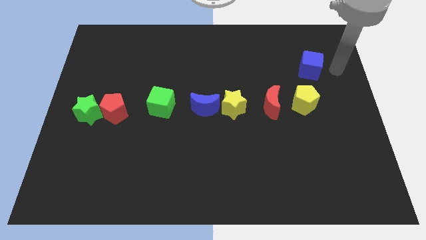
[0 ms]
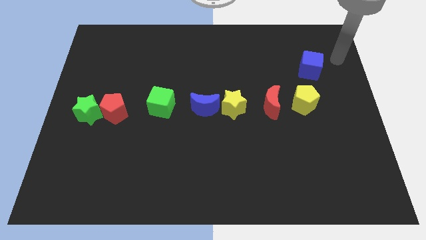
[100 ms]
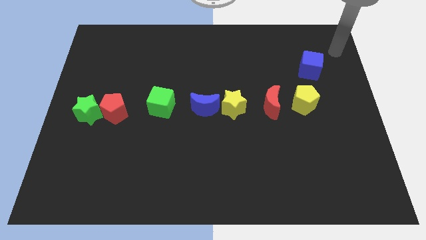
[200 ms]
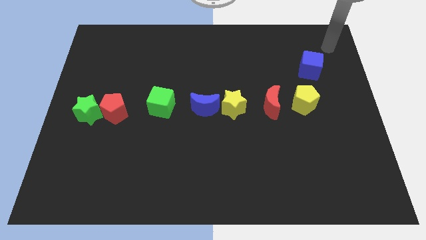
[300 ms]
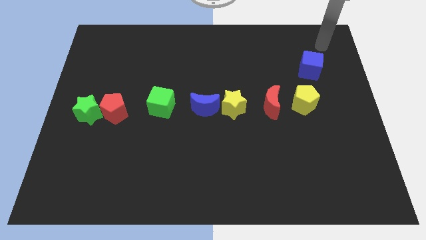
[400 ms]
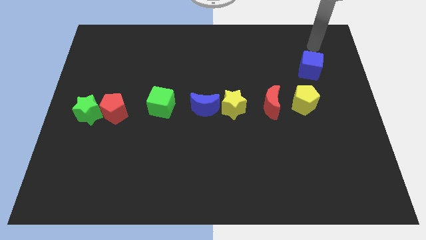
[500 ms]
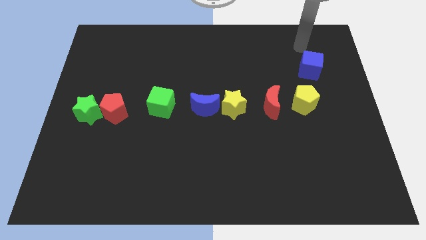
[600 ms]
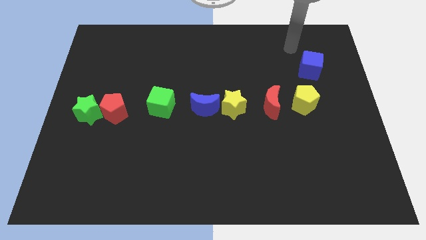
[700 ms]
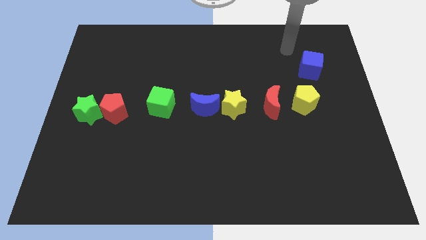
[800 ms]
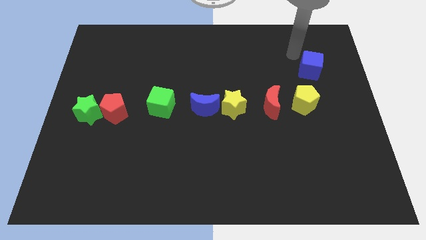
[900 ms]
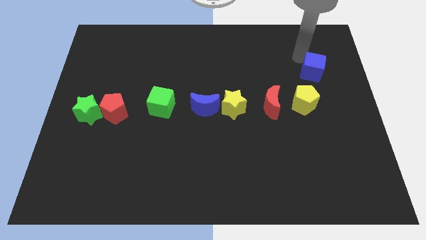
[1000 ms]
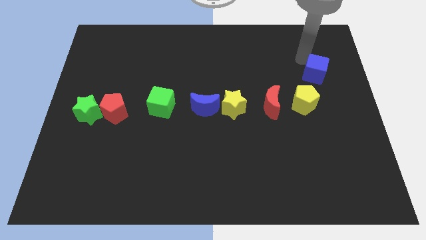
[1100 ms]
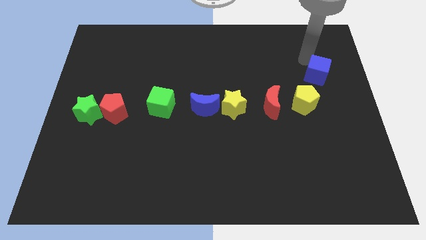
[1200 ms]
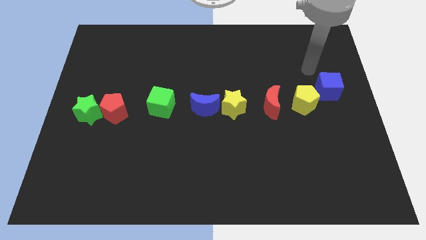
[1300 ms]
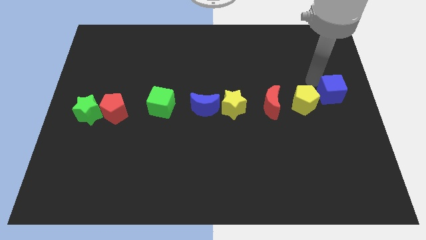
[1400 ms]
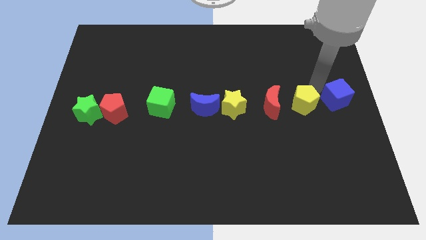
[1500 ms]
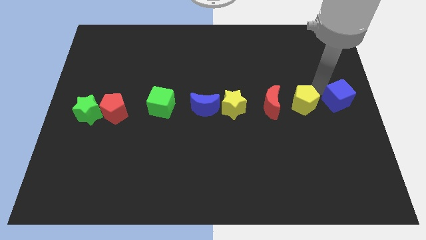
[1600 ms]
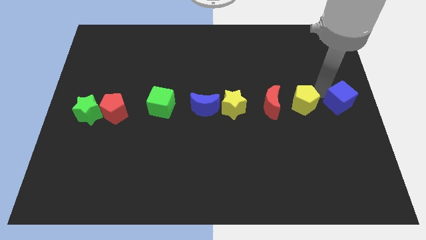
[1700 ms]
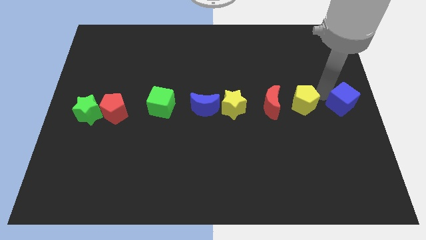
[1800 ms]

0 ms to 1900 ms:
push the blue cube to the right of the yellow pentagon

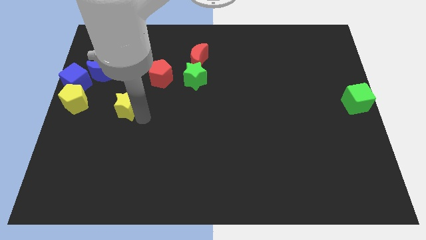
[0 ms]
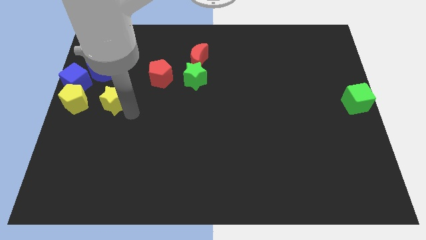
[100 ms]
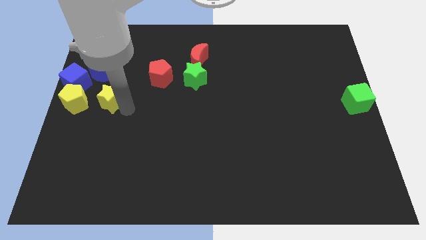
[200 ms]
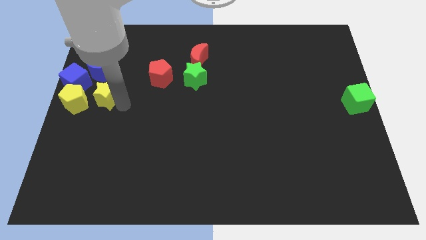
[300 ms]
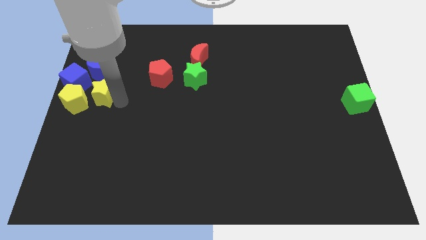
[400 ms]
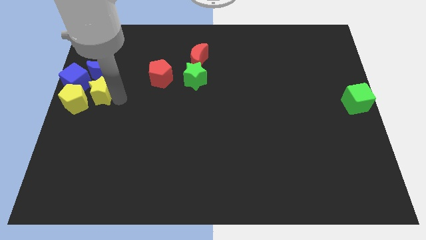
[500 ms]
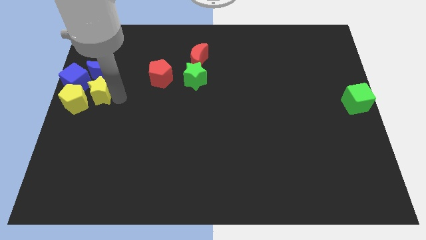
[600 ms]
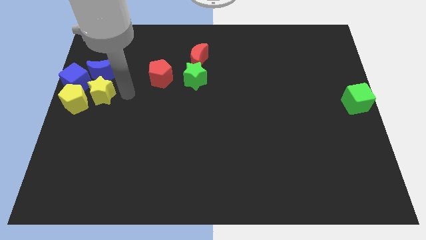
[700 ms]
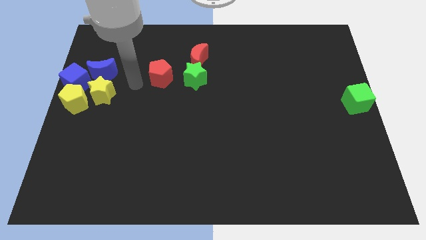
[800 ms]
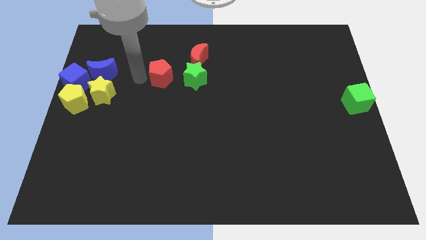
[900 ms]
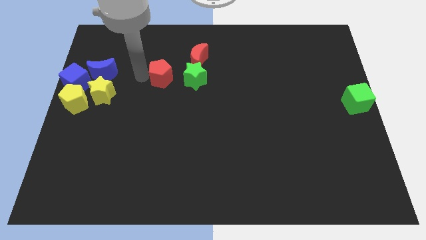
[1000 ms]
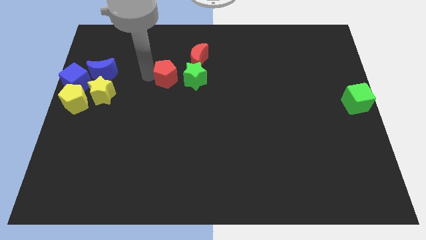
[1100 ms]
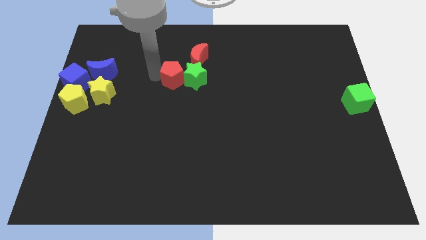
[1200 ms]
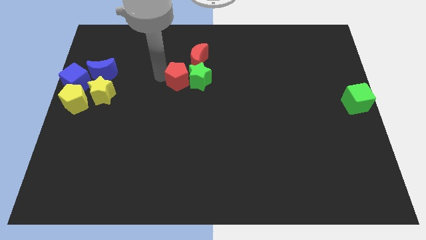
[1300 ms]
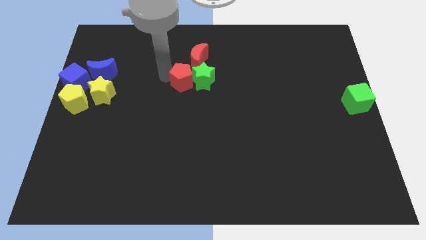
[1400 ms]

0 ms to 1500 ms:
move the yellow star to the right side of the yellow pentagon

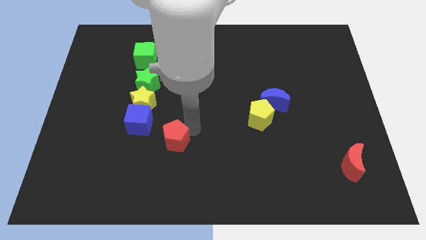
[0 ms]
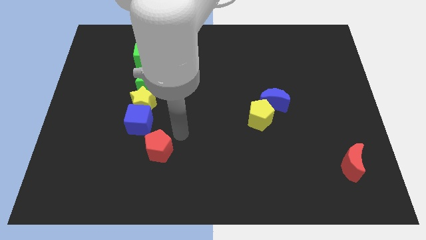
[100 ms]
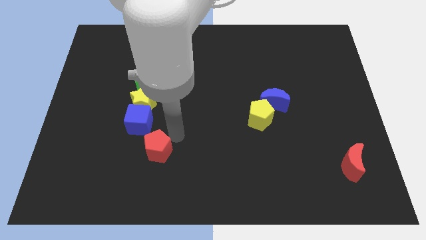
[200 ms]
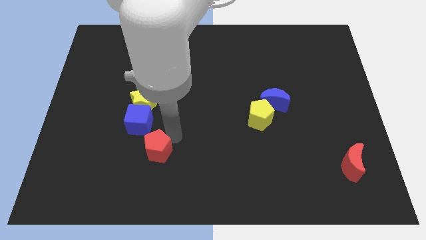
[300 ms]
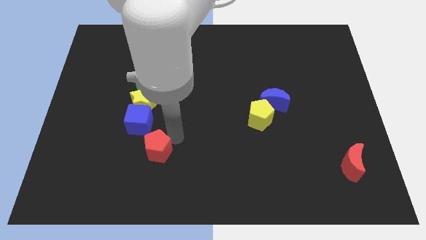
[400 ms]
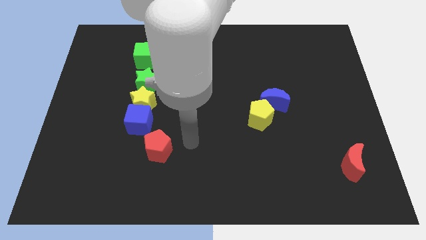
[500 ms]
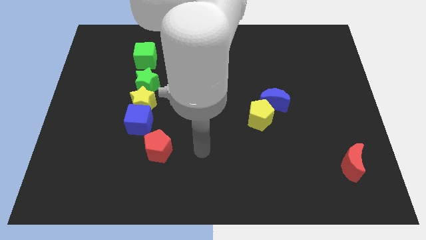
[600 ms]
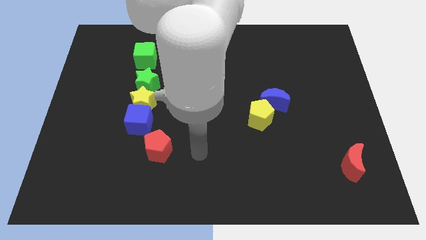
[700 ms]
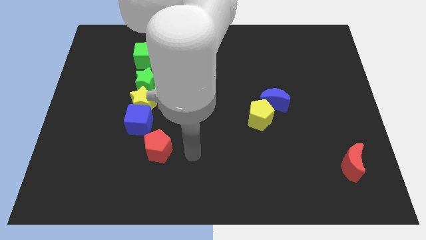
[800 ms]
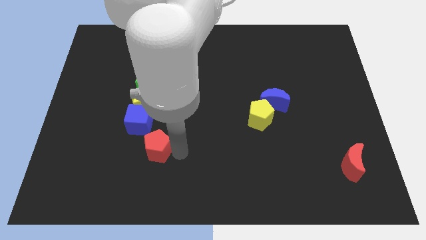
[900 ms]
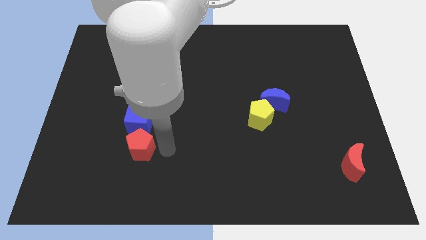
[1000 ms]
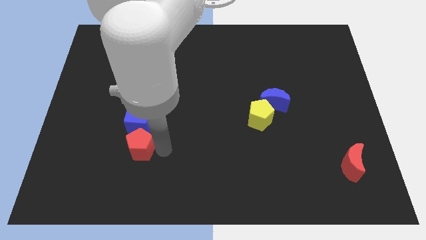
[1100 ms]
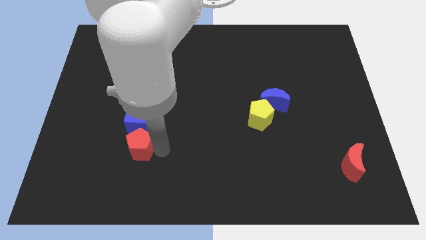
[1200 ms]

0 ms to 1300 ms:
place red pentagon to the bottom of blue cube

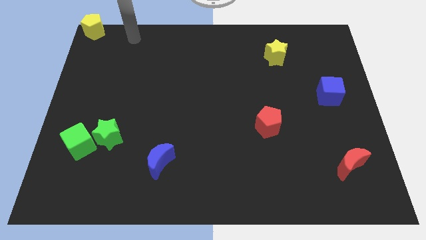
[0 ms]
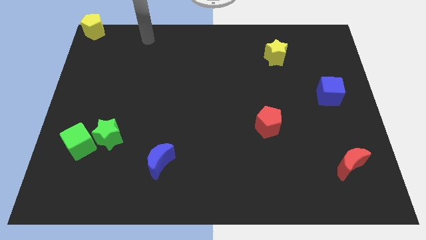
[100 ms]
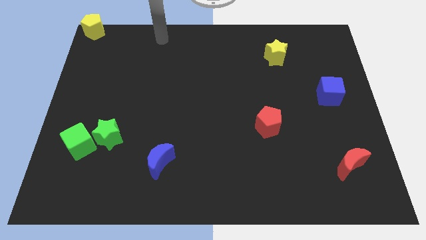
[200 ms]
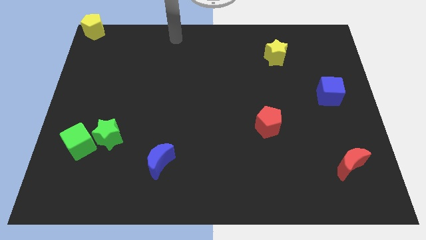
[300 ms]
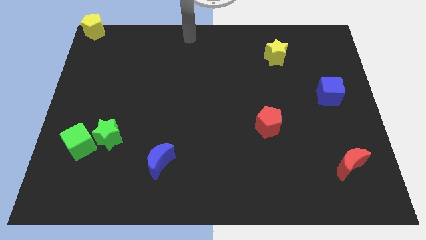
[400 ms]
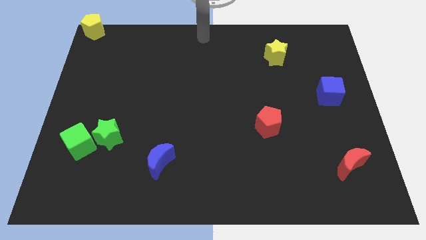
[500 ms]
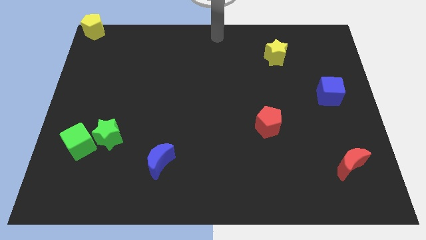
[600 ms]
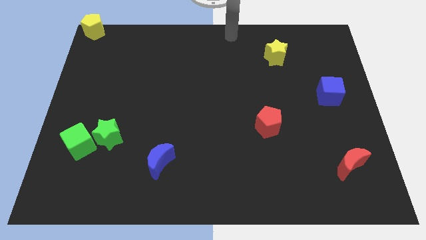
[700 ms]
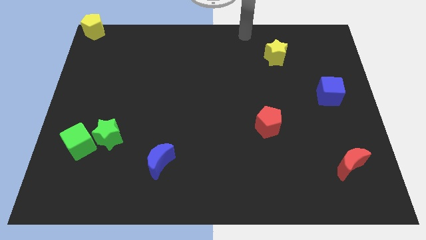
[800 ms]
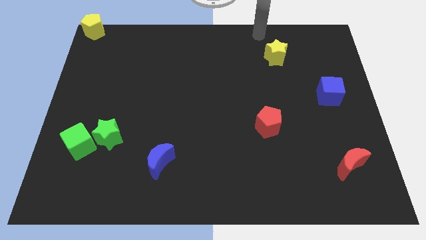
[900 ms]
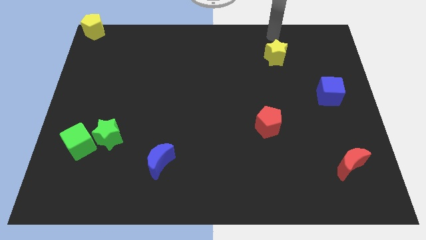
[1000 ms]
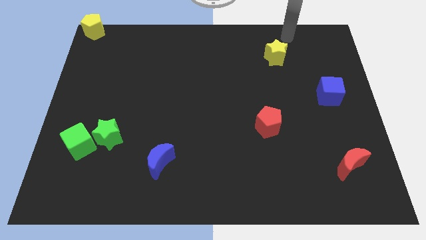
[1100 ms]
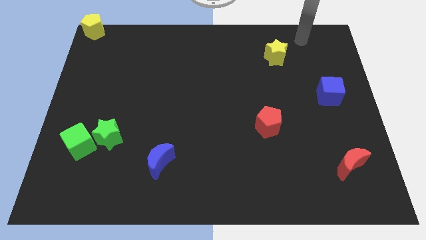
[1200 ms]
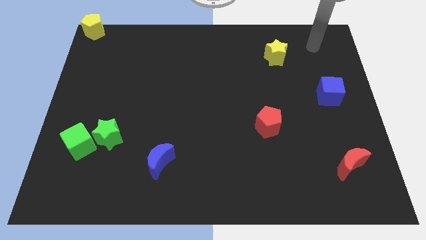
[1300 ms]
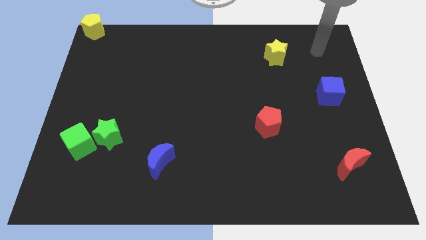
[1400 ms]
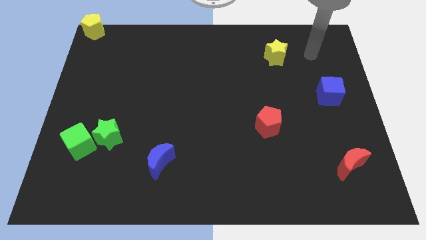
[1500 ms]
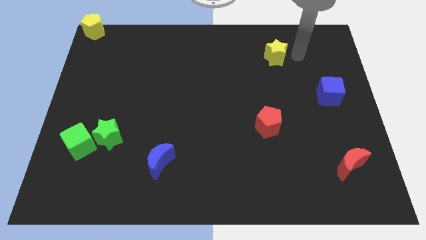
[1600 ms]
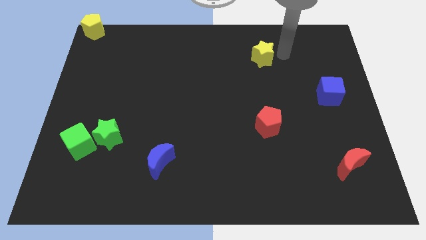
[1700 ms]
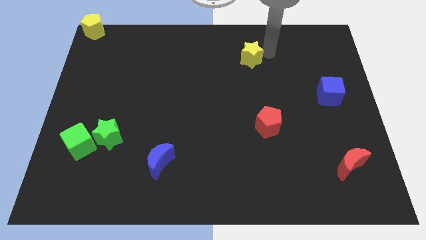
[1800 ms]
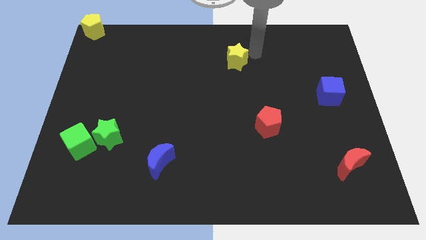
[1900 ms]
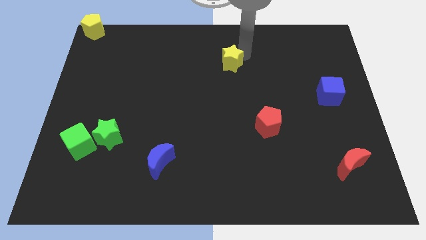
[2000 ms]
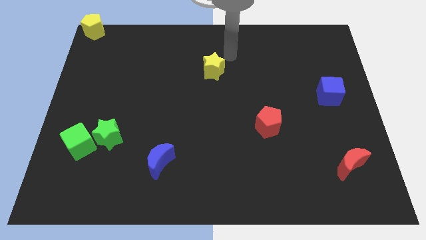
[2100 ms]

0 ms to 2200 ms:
move the yellow star to top center of the board

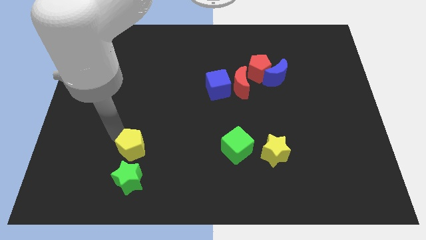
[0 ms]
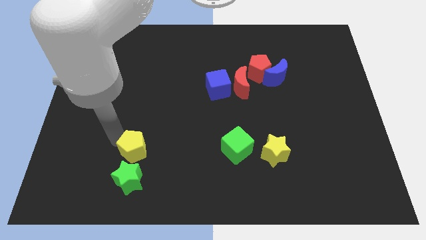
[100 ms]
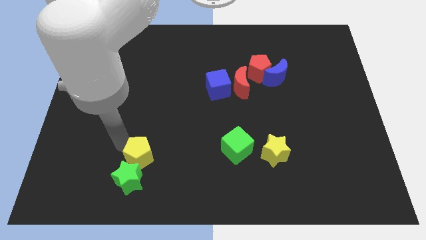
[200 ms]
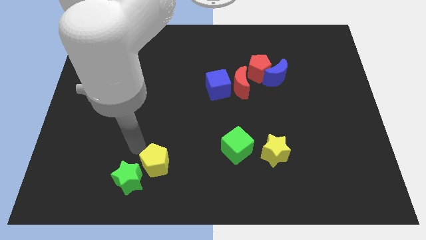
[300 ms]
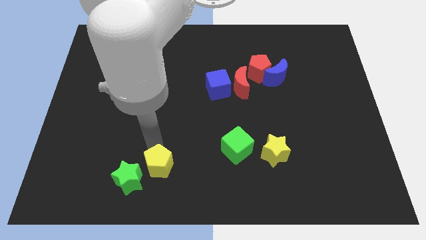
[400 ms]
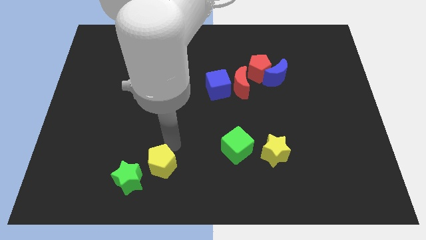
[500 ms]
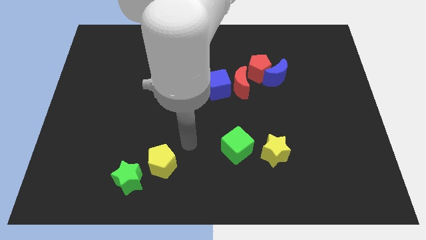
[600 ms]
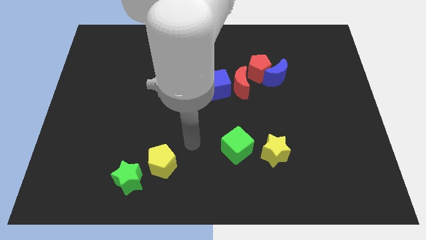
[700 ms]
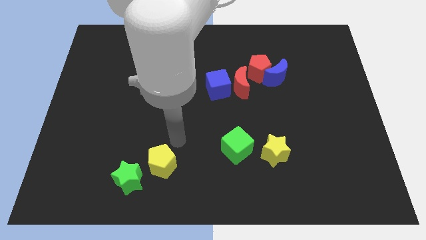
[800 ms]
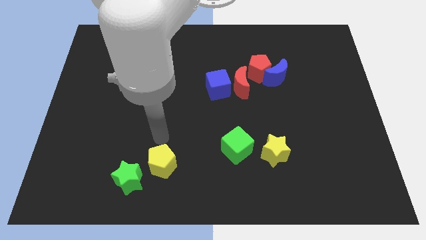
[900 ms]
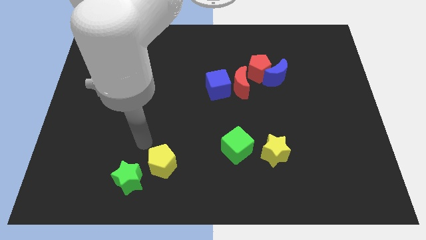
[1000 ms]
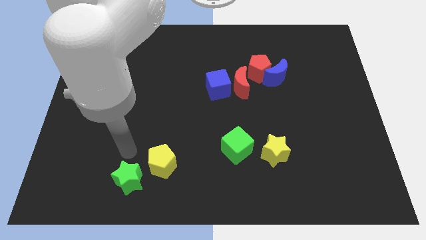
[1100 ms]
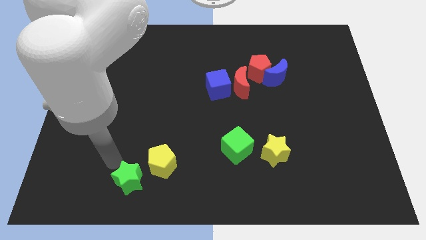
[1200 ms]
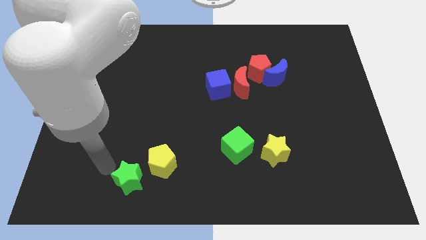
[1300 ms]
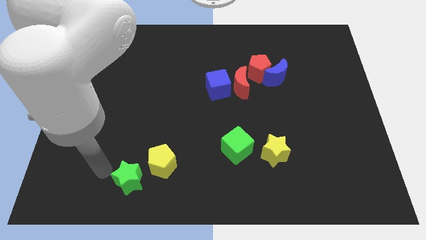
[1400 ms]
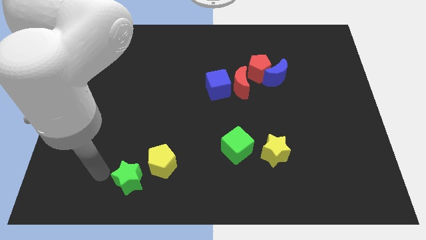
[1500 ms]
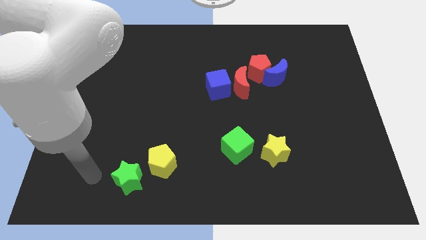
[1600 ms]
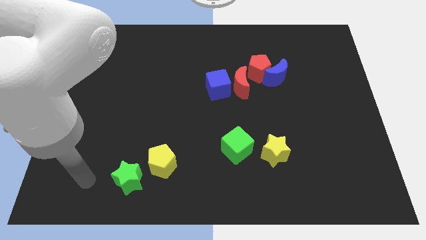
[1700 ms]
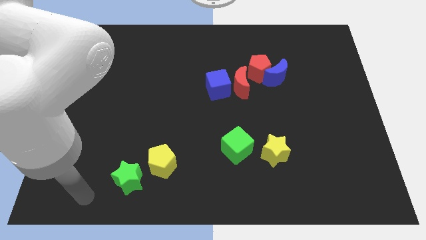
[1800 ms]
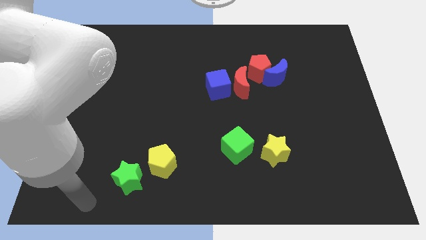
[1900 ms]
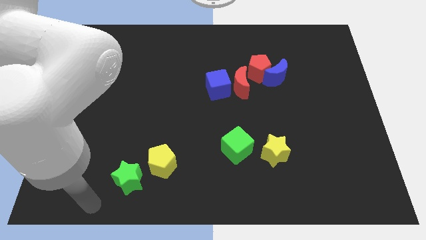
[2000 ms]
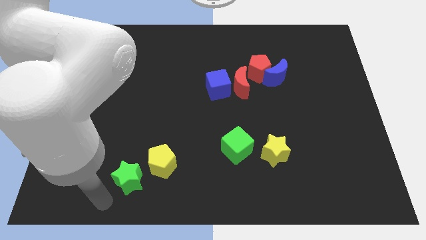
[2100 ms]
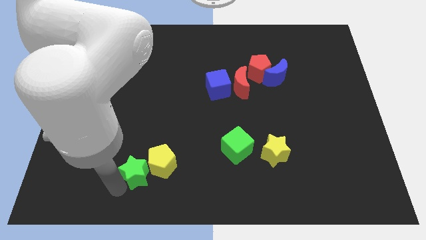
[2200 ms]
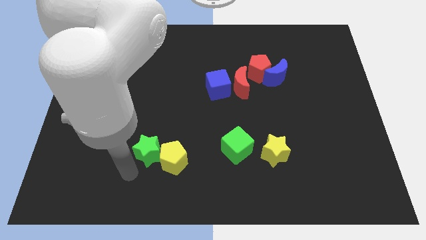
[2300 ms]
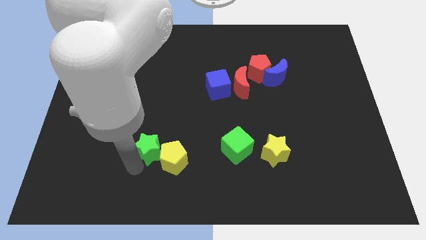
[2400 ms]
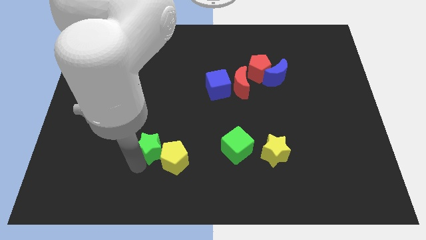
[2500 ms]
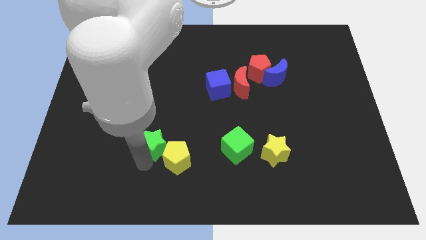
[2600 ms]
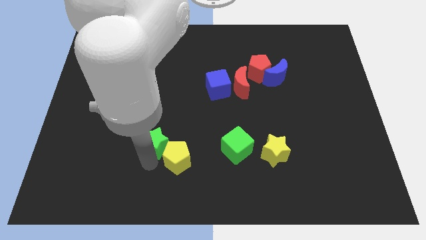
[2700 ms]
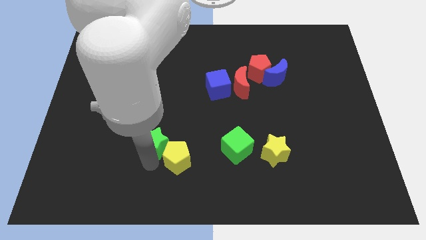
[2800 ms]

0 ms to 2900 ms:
place yellow star right side of green star
